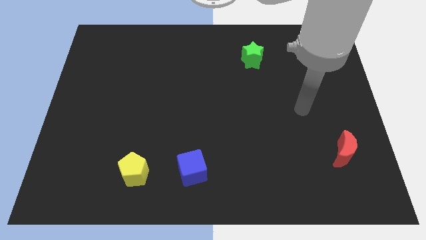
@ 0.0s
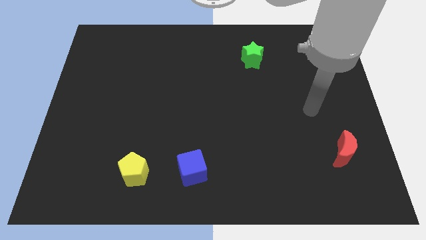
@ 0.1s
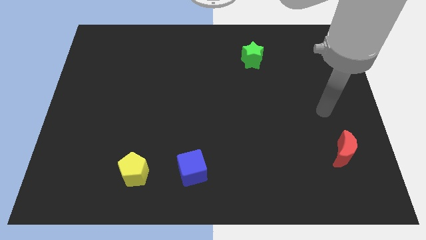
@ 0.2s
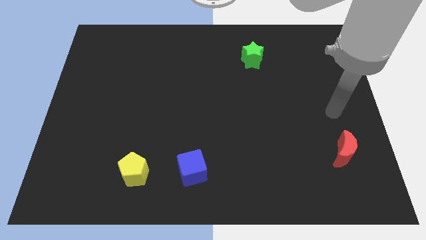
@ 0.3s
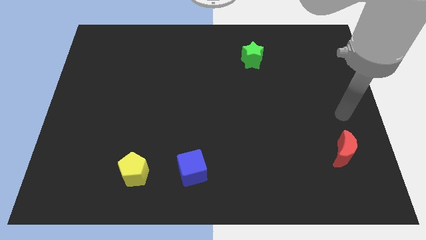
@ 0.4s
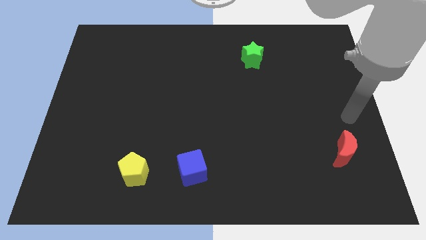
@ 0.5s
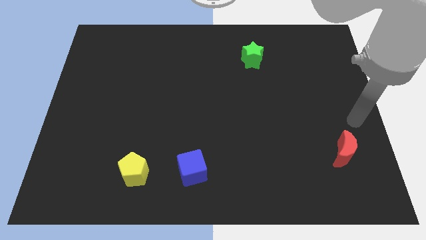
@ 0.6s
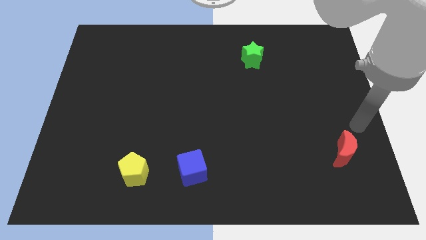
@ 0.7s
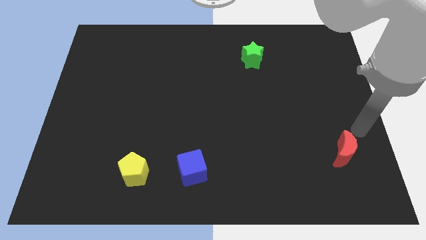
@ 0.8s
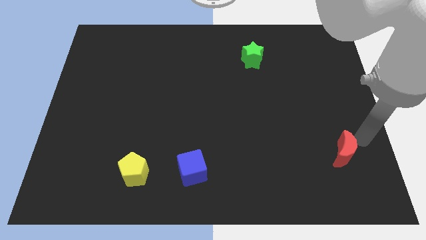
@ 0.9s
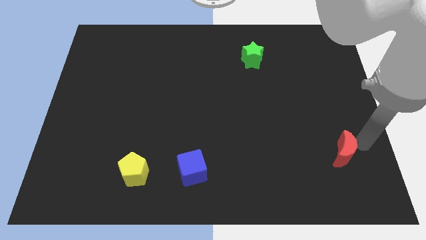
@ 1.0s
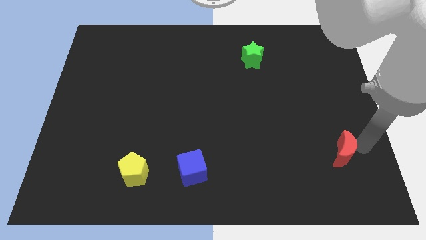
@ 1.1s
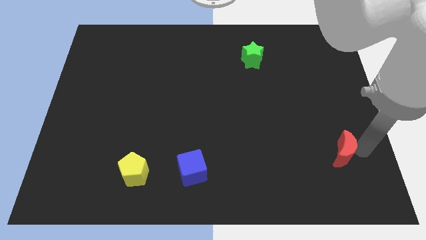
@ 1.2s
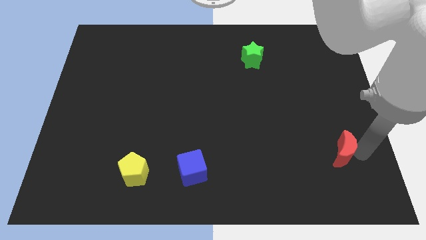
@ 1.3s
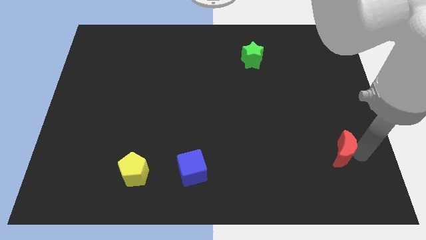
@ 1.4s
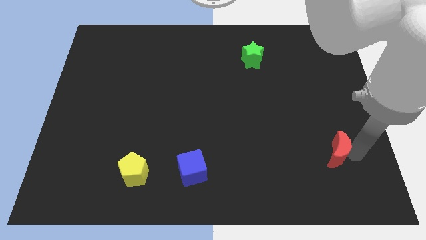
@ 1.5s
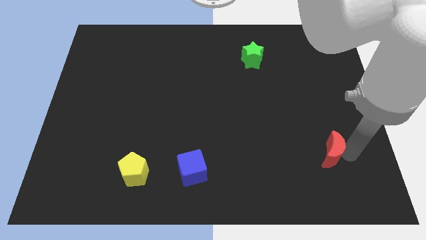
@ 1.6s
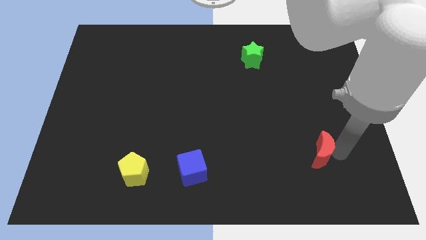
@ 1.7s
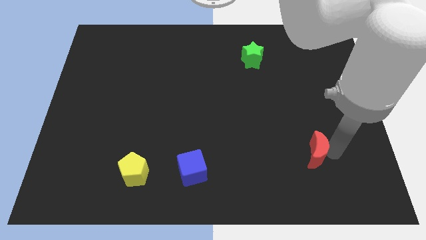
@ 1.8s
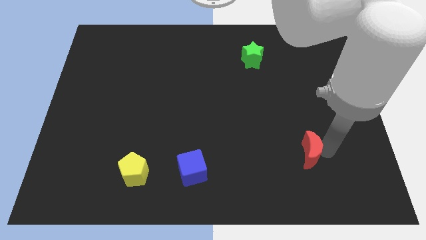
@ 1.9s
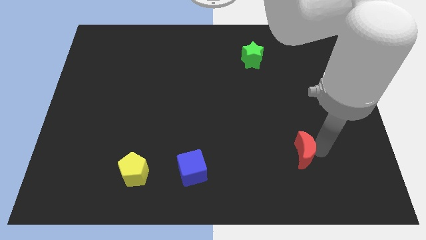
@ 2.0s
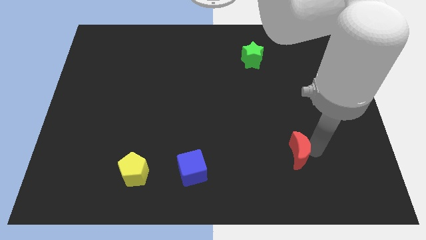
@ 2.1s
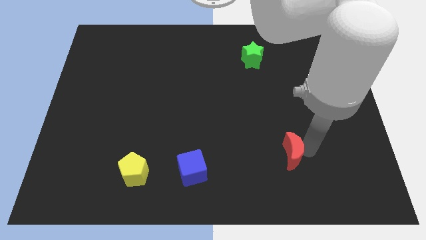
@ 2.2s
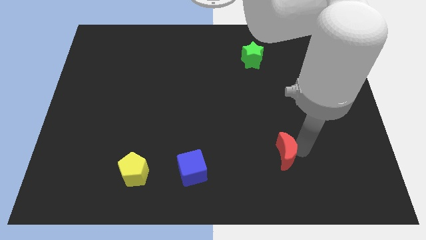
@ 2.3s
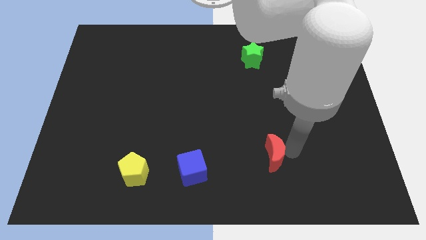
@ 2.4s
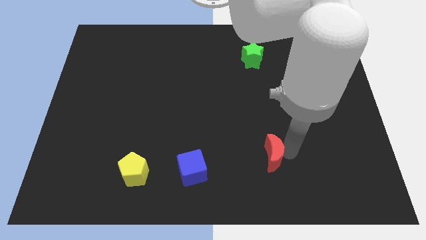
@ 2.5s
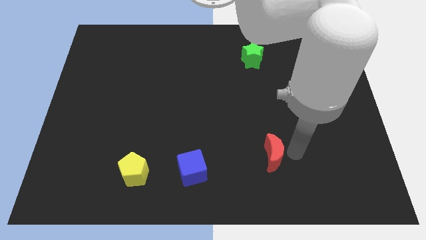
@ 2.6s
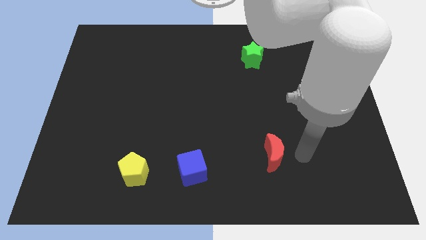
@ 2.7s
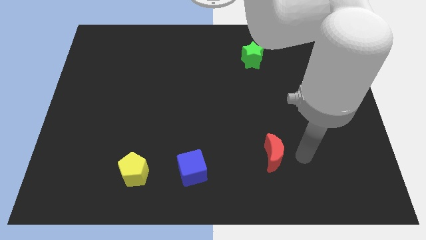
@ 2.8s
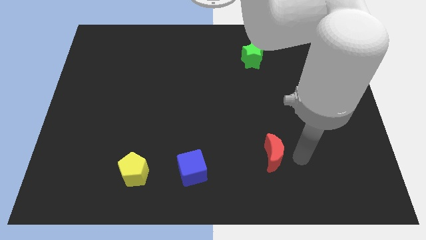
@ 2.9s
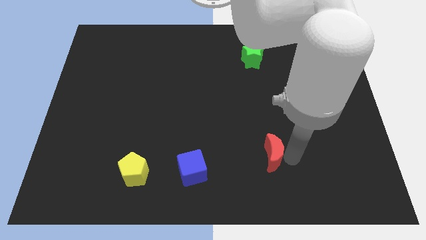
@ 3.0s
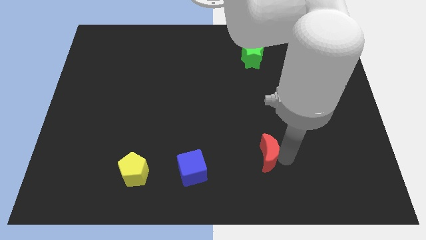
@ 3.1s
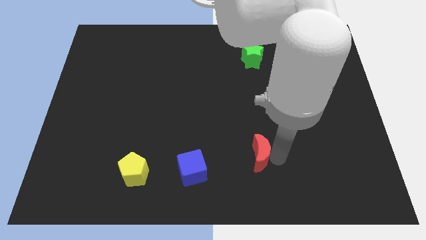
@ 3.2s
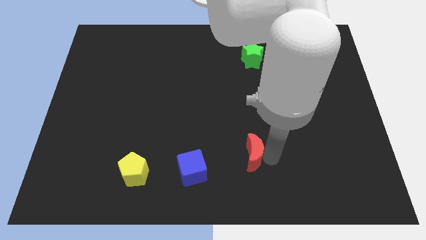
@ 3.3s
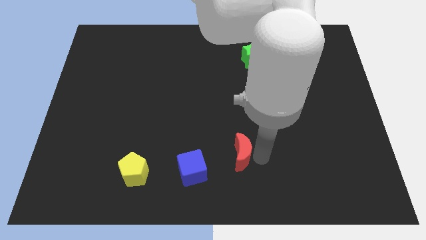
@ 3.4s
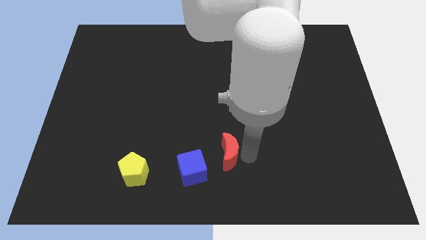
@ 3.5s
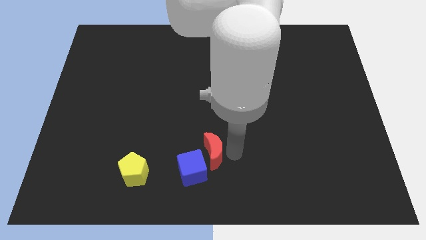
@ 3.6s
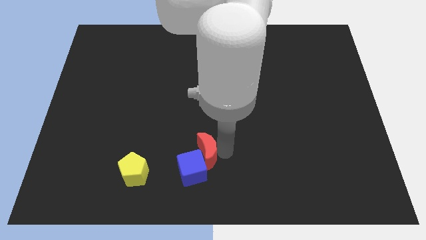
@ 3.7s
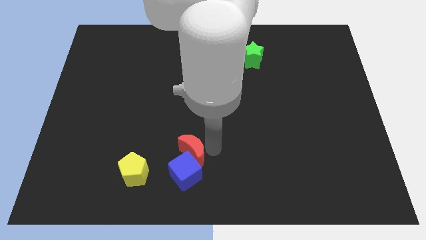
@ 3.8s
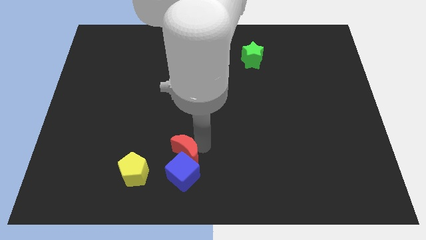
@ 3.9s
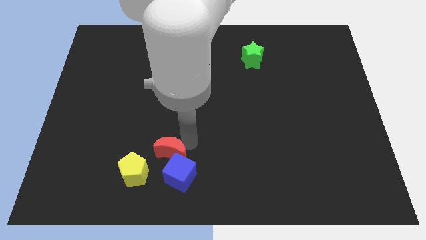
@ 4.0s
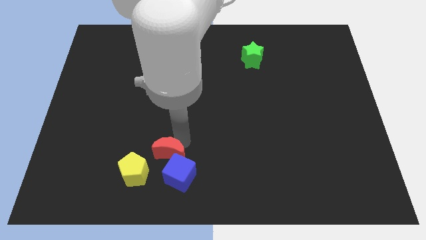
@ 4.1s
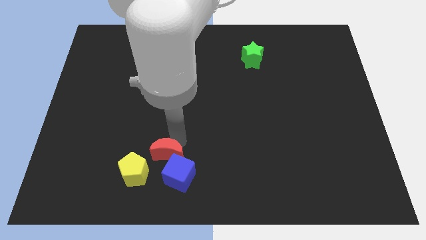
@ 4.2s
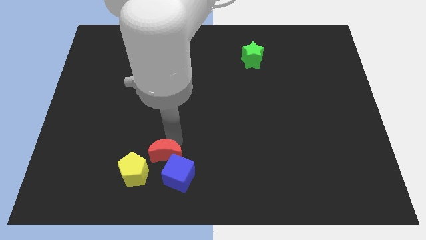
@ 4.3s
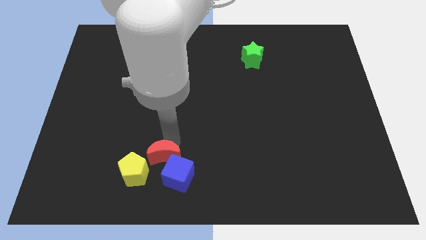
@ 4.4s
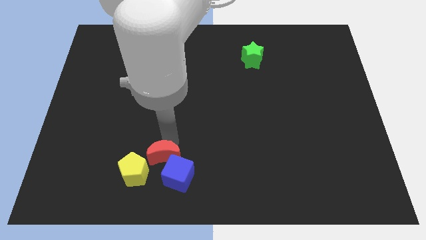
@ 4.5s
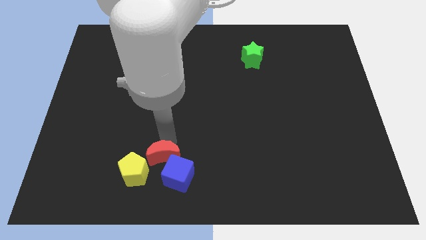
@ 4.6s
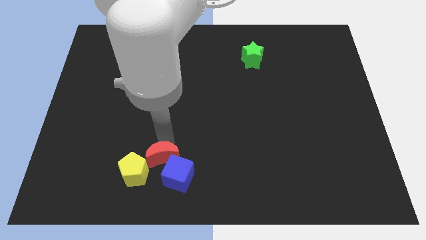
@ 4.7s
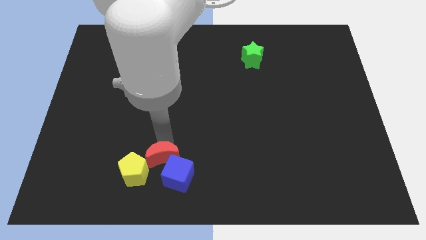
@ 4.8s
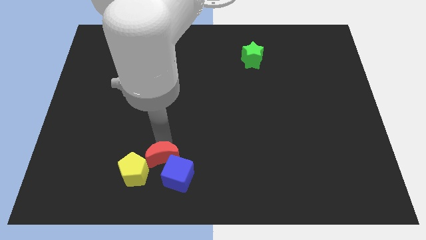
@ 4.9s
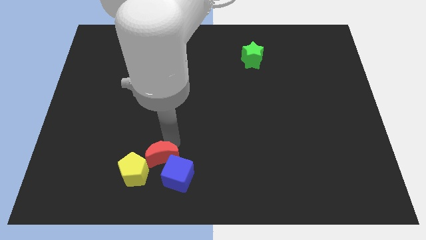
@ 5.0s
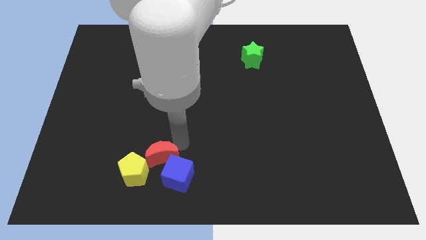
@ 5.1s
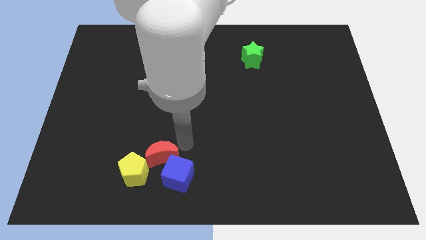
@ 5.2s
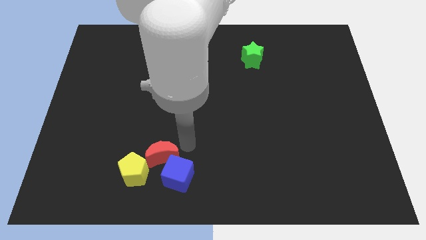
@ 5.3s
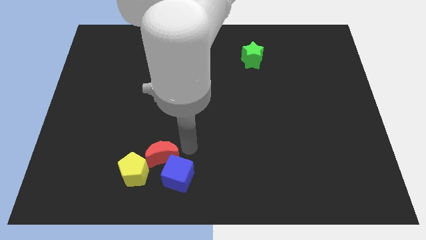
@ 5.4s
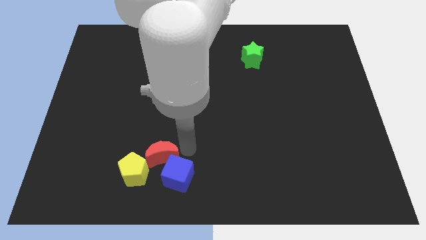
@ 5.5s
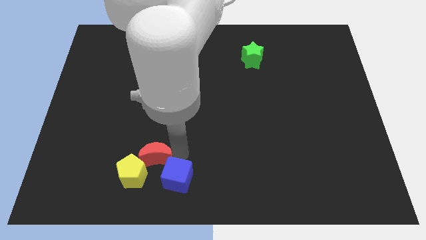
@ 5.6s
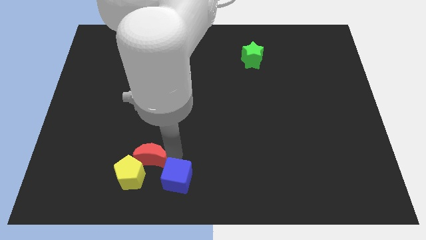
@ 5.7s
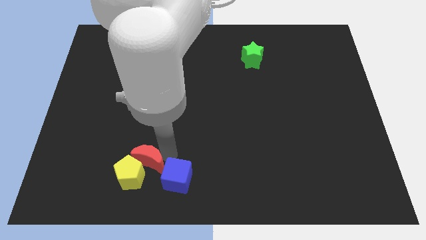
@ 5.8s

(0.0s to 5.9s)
put the red moon to the yellow block

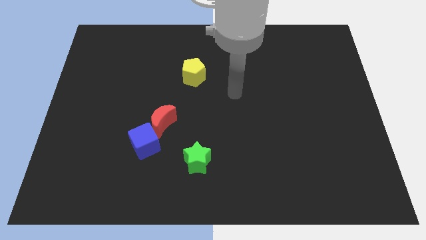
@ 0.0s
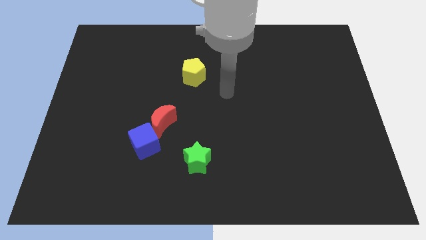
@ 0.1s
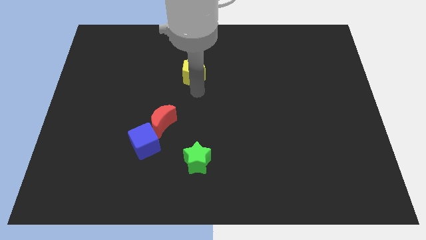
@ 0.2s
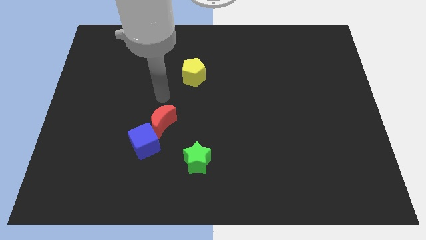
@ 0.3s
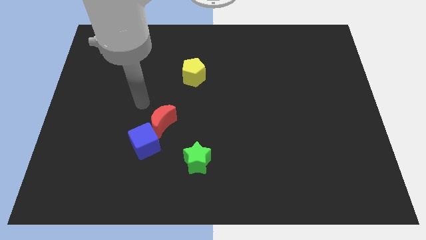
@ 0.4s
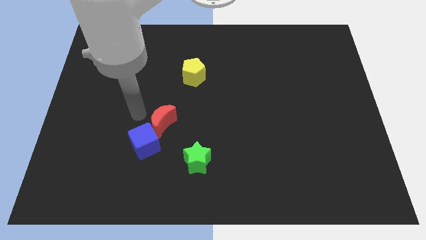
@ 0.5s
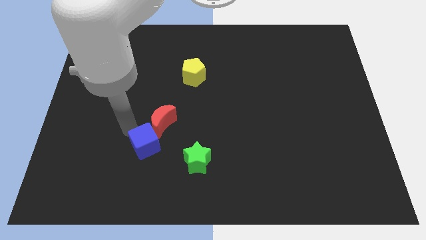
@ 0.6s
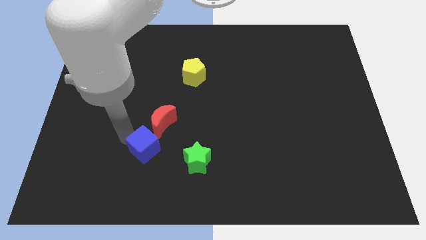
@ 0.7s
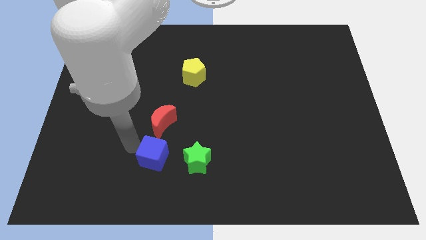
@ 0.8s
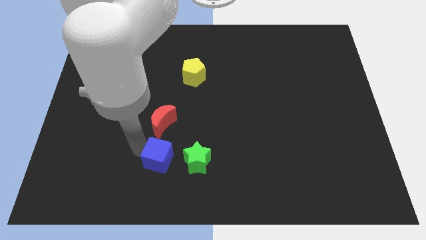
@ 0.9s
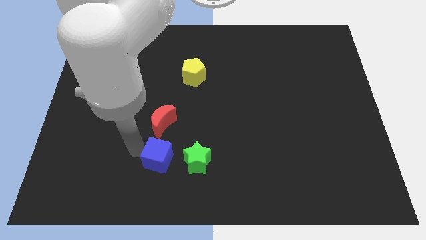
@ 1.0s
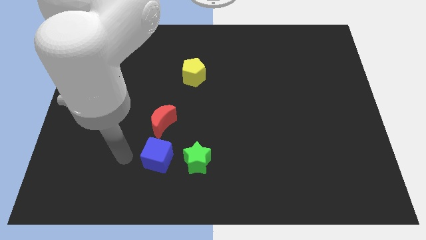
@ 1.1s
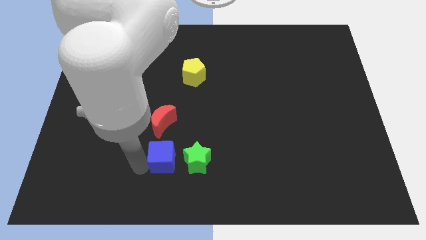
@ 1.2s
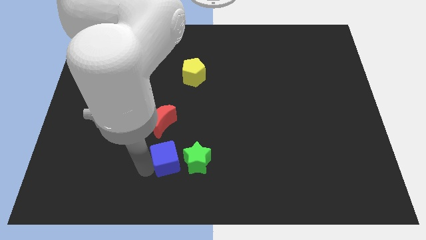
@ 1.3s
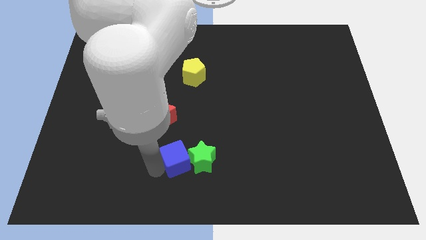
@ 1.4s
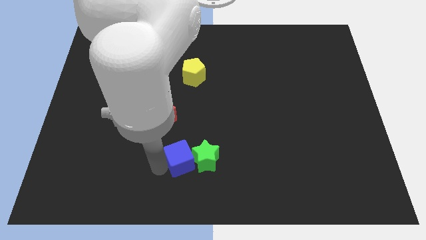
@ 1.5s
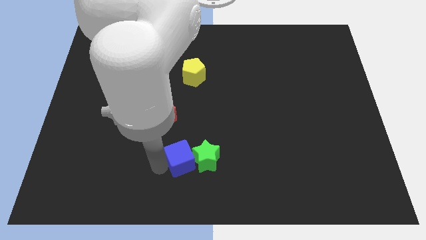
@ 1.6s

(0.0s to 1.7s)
push the cube to the green block

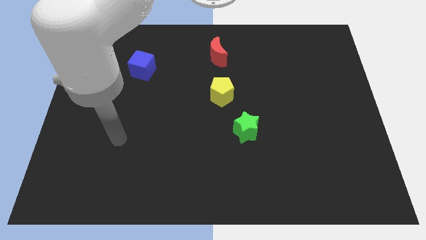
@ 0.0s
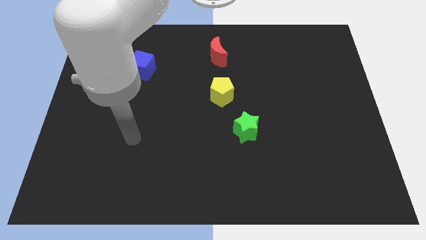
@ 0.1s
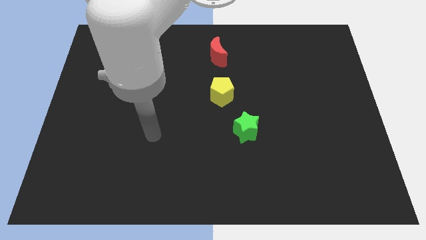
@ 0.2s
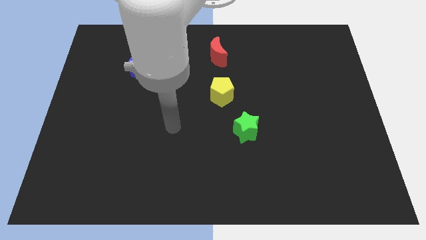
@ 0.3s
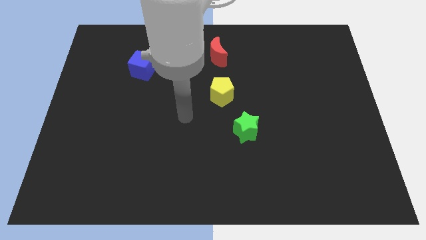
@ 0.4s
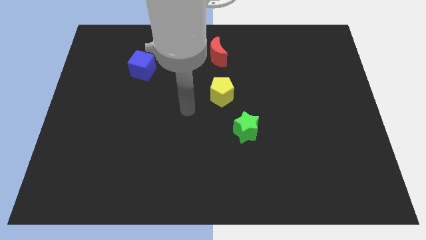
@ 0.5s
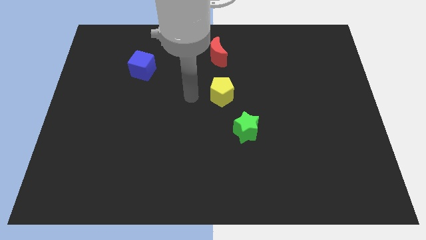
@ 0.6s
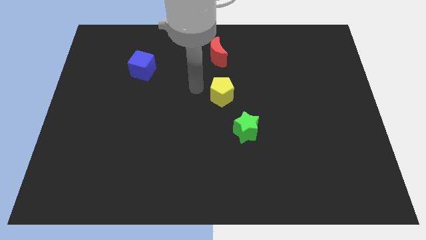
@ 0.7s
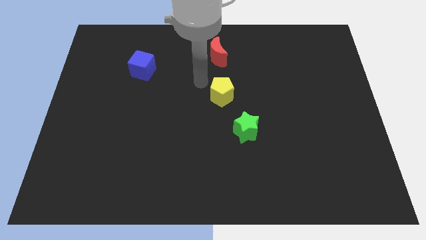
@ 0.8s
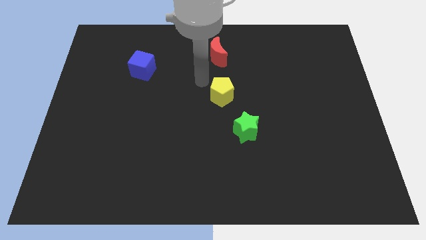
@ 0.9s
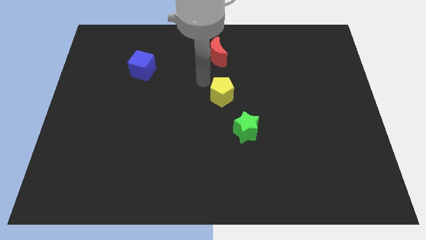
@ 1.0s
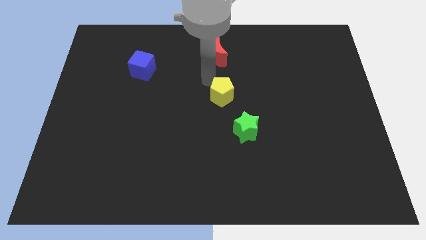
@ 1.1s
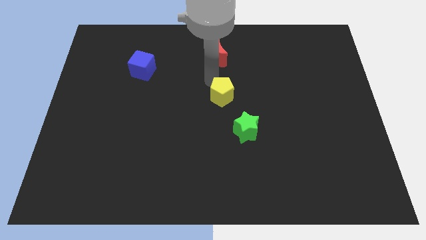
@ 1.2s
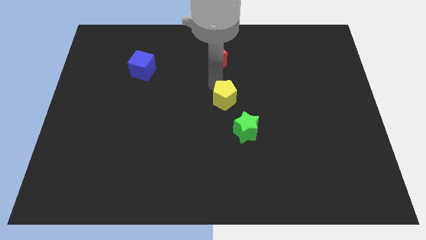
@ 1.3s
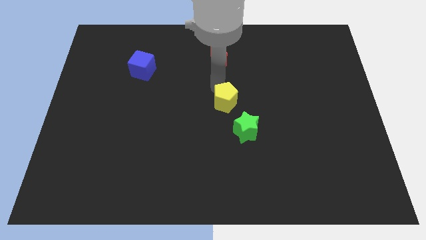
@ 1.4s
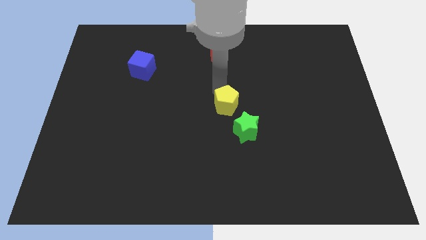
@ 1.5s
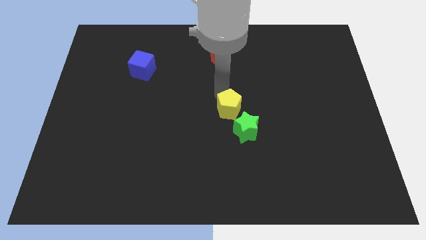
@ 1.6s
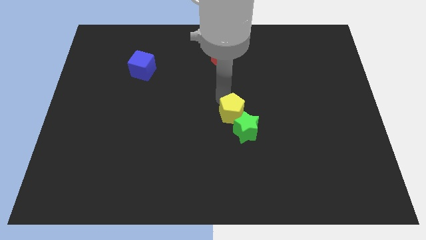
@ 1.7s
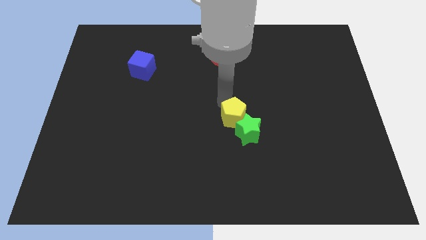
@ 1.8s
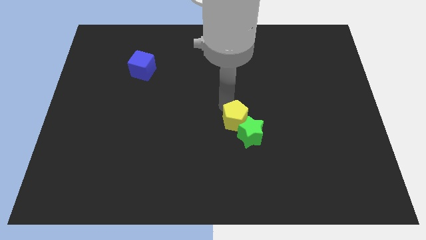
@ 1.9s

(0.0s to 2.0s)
put the pentagon next to the green block
